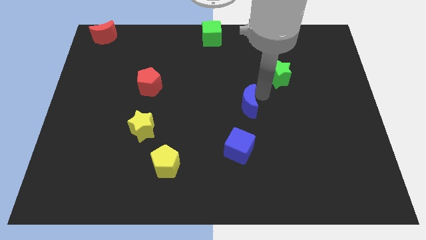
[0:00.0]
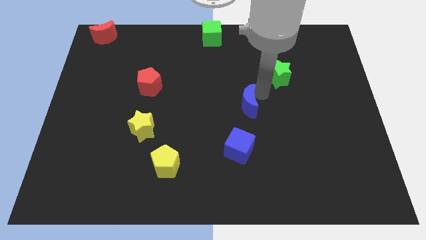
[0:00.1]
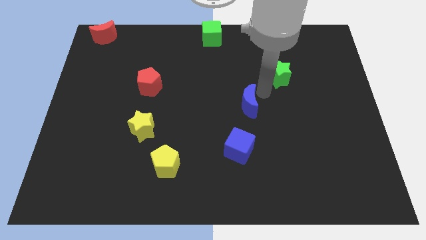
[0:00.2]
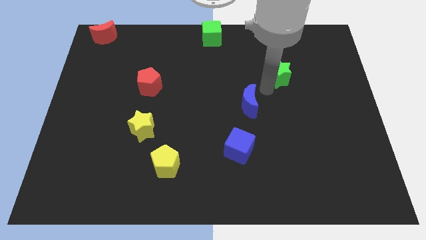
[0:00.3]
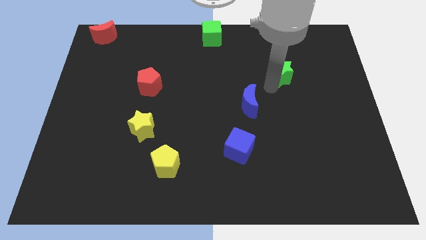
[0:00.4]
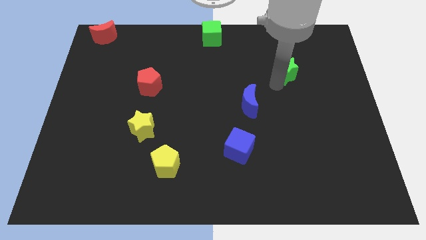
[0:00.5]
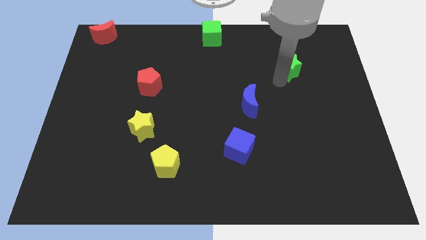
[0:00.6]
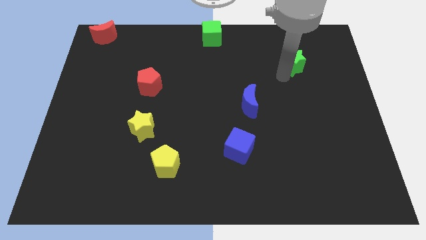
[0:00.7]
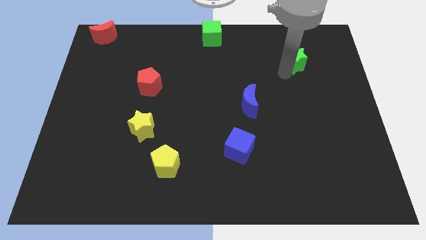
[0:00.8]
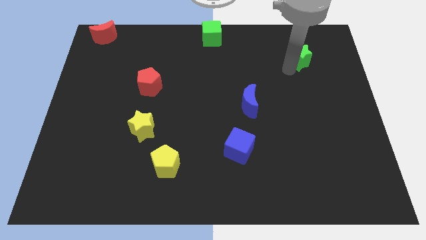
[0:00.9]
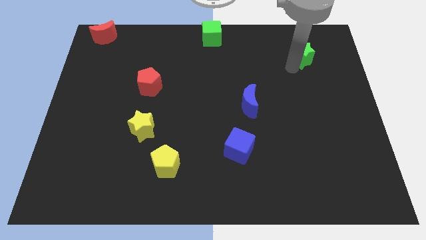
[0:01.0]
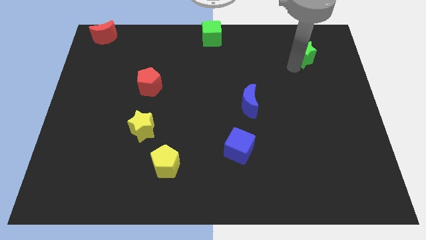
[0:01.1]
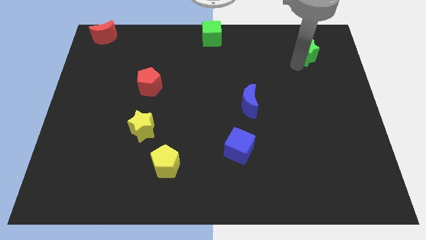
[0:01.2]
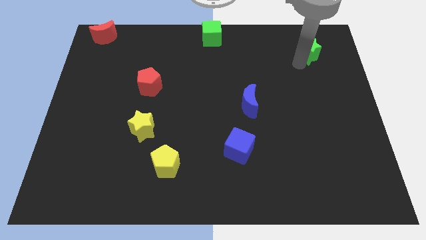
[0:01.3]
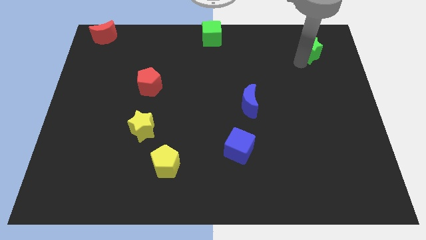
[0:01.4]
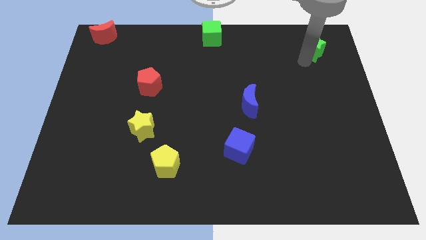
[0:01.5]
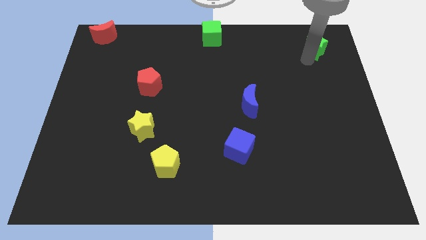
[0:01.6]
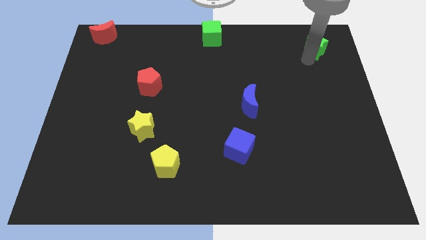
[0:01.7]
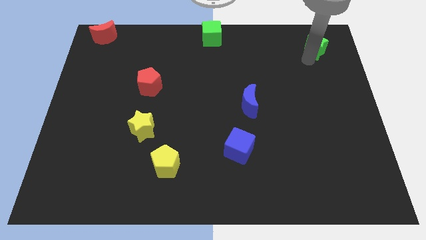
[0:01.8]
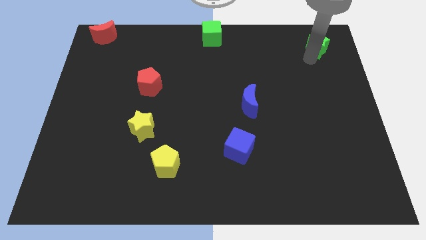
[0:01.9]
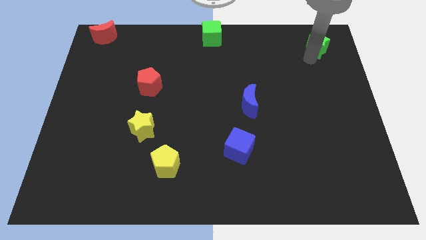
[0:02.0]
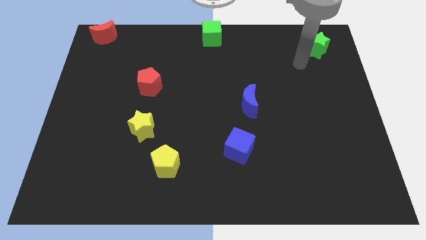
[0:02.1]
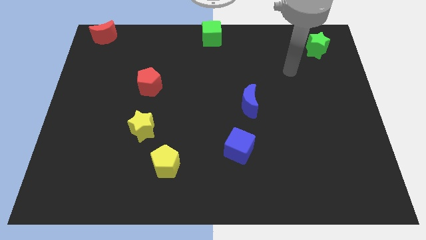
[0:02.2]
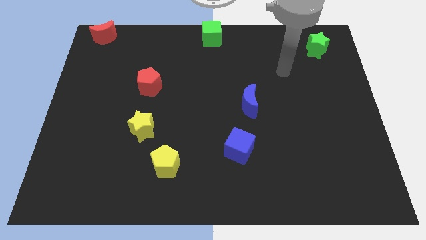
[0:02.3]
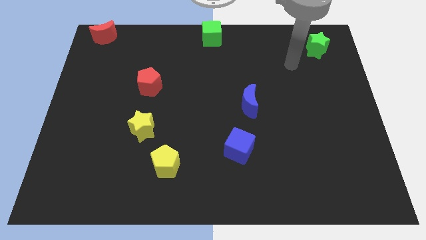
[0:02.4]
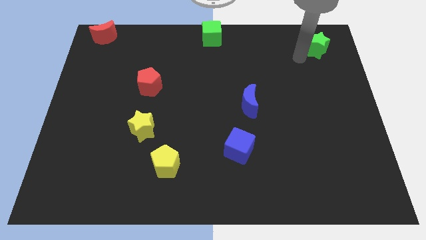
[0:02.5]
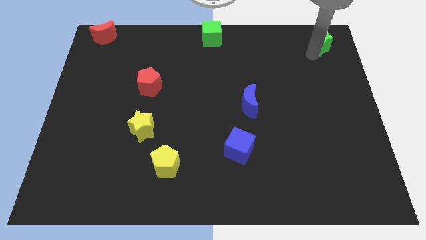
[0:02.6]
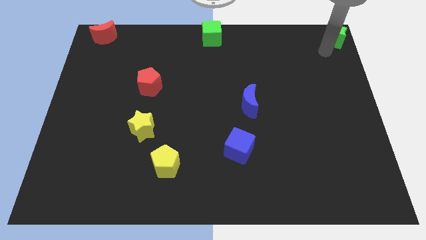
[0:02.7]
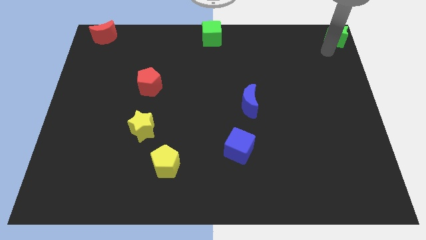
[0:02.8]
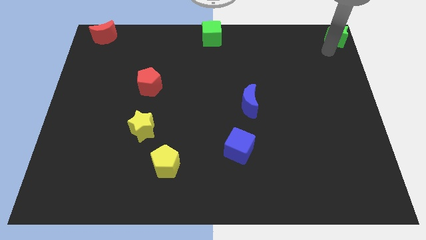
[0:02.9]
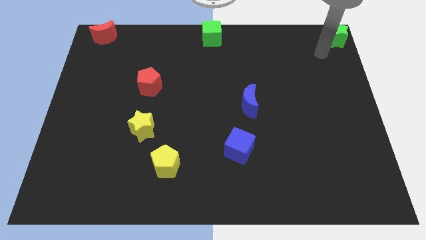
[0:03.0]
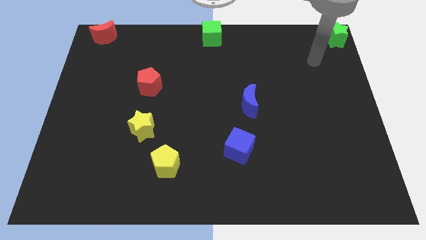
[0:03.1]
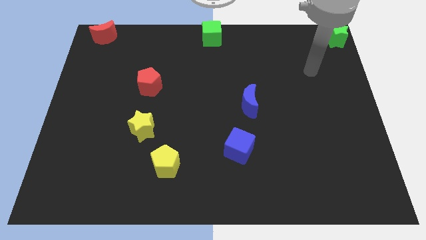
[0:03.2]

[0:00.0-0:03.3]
slide green star at top right corner of board

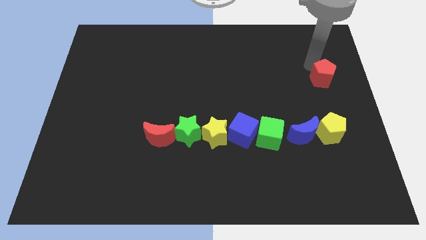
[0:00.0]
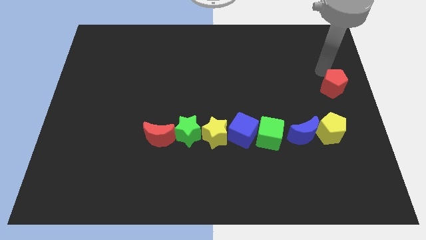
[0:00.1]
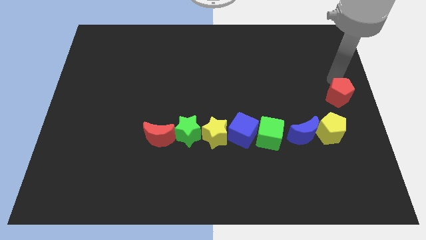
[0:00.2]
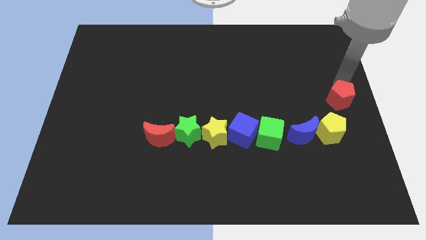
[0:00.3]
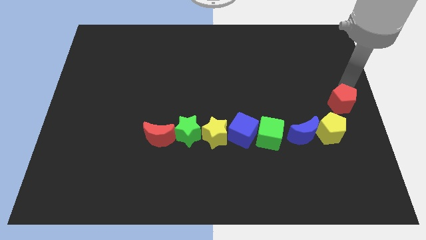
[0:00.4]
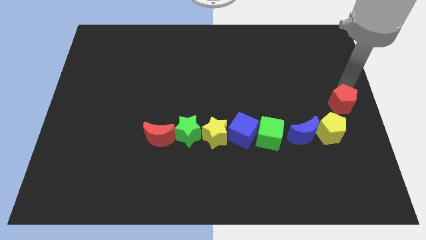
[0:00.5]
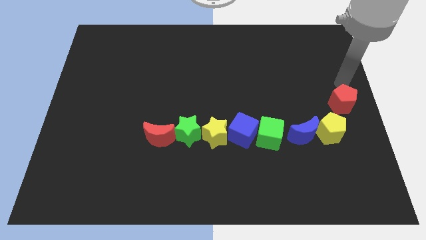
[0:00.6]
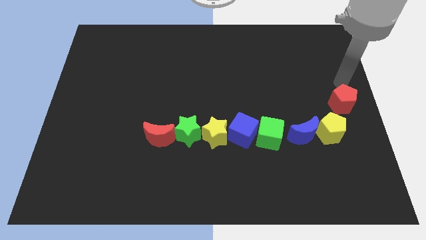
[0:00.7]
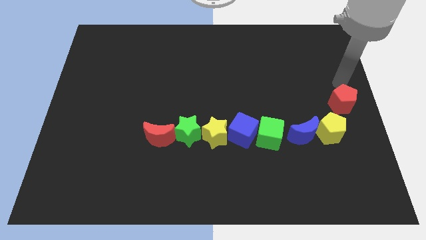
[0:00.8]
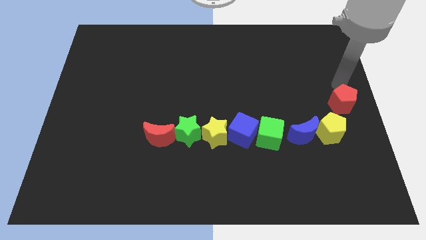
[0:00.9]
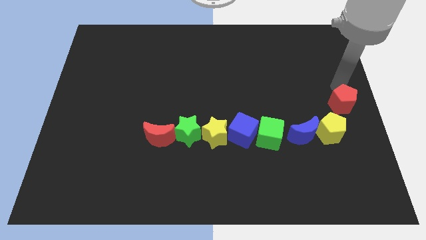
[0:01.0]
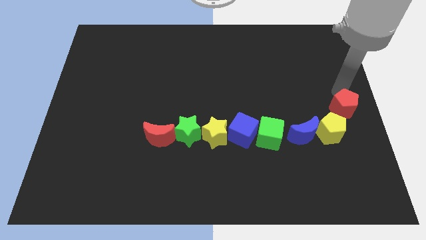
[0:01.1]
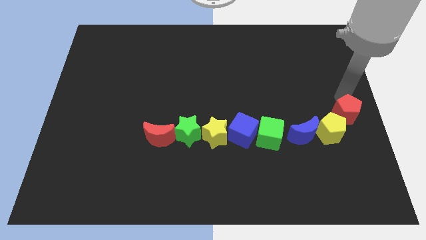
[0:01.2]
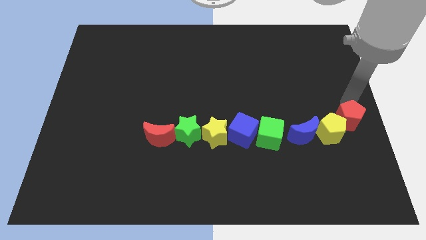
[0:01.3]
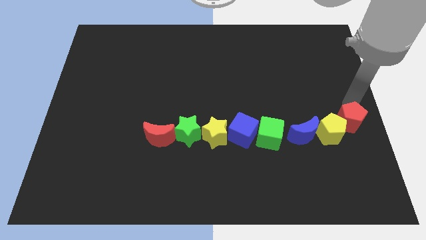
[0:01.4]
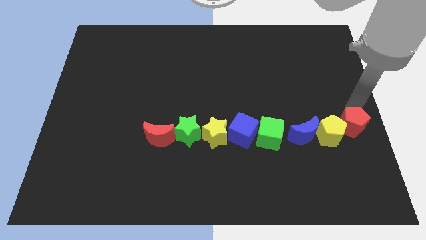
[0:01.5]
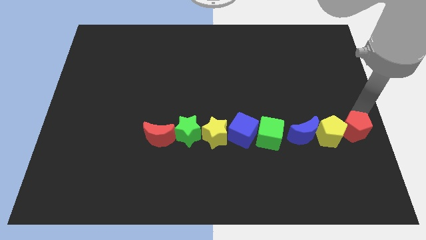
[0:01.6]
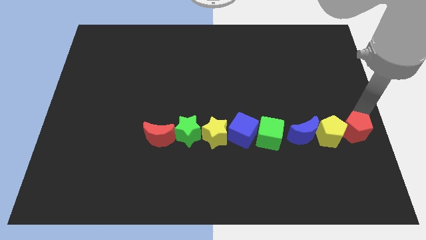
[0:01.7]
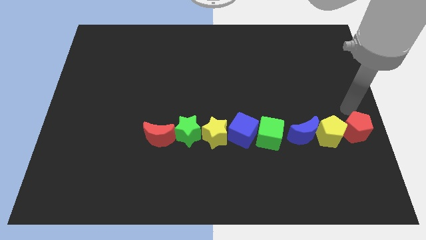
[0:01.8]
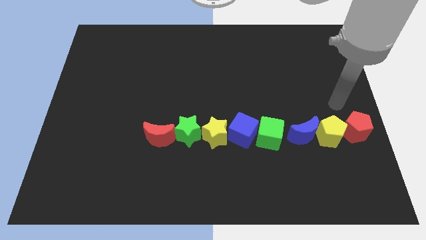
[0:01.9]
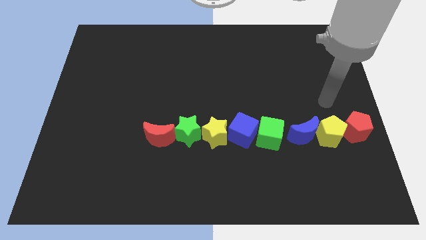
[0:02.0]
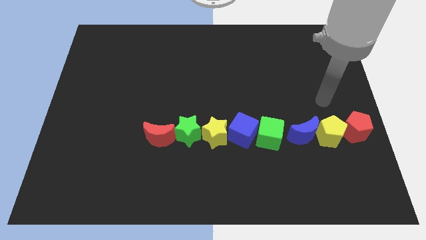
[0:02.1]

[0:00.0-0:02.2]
move the red pentagon bottom right of the board to form a horizontal line

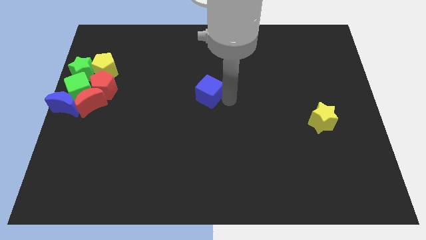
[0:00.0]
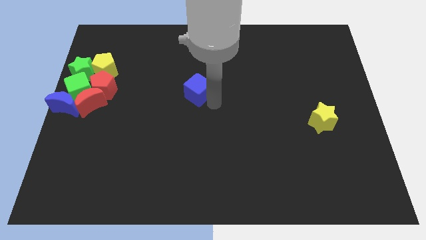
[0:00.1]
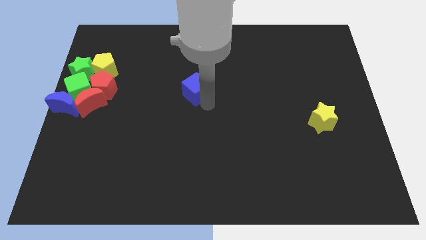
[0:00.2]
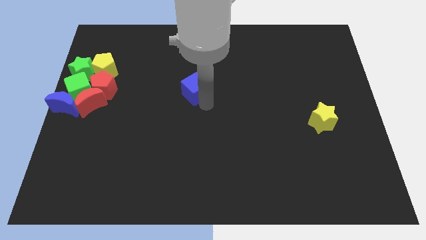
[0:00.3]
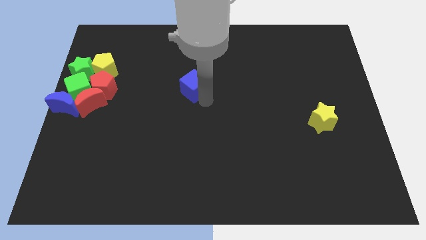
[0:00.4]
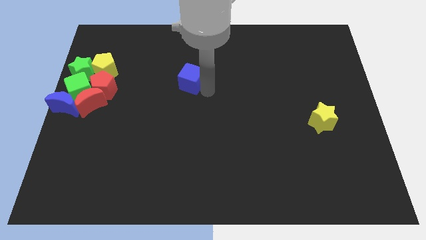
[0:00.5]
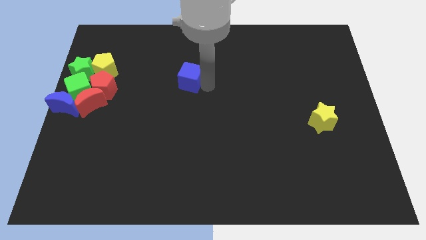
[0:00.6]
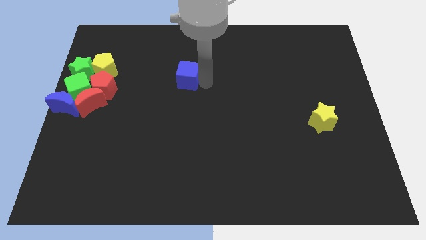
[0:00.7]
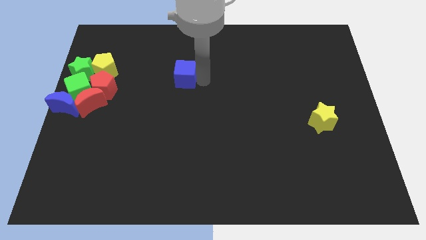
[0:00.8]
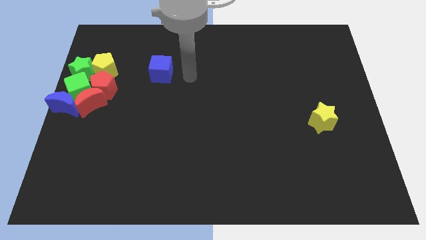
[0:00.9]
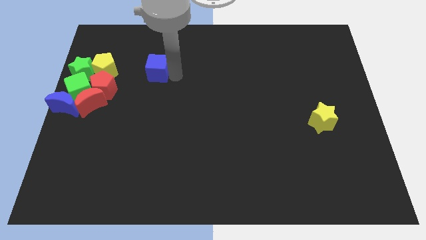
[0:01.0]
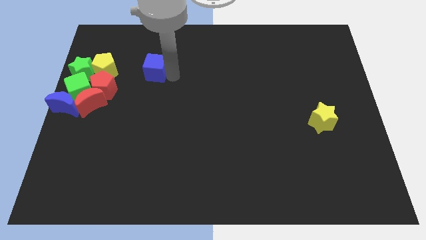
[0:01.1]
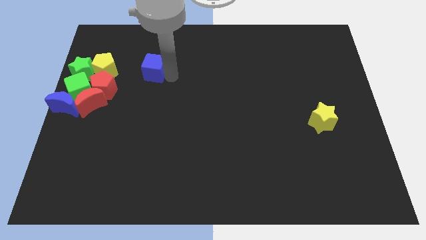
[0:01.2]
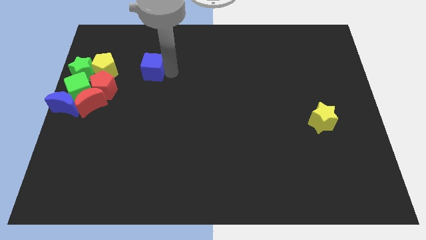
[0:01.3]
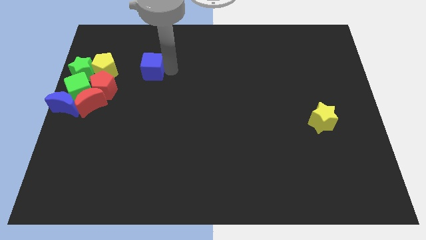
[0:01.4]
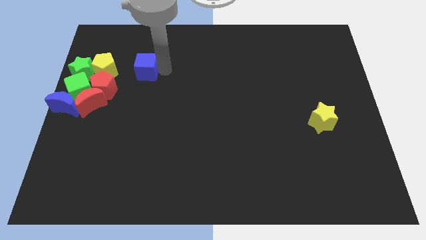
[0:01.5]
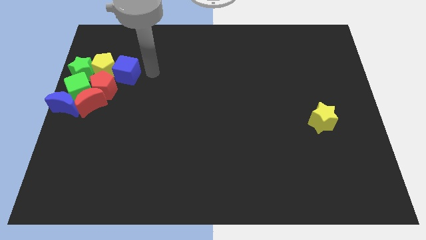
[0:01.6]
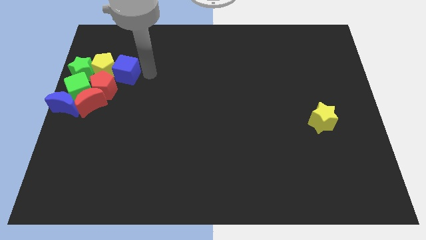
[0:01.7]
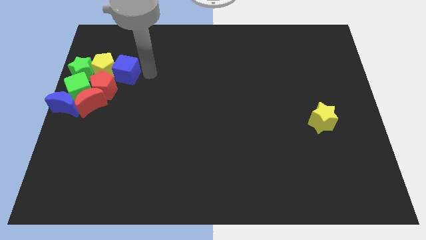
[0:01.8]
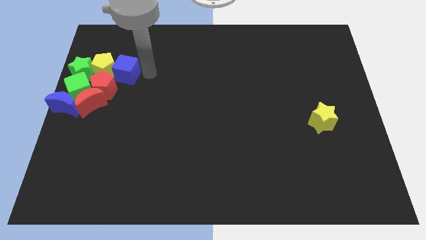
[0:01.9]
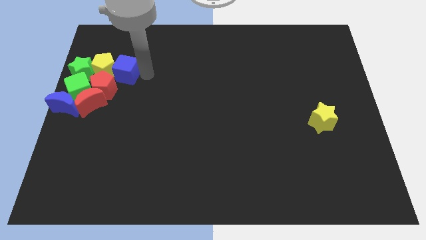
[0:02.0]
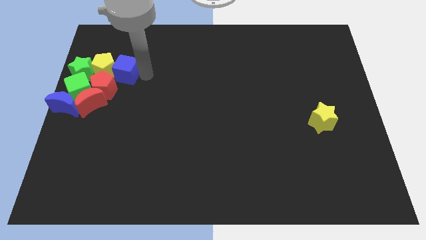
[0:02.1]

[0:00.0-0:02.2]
put the blue cube at the right of the yellow pentagon

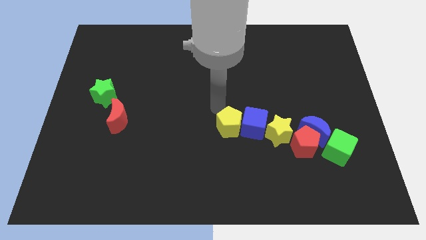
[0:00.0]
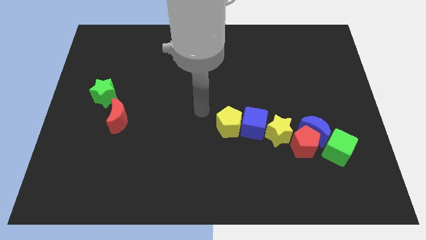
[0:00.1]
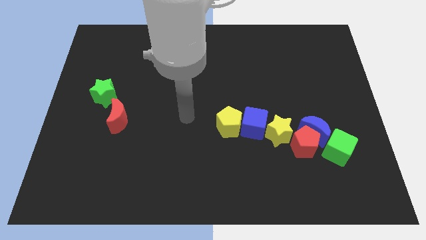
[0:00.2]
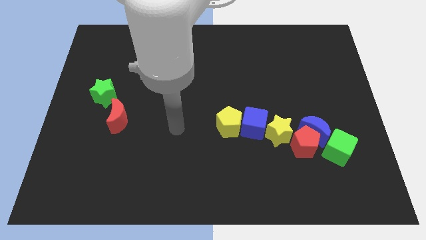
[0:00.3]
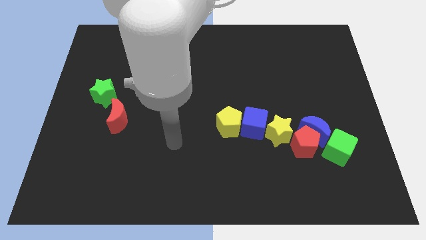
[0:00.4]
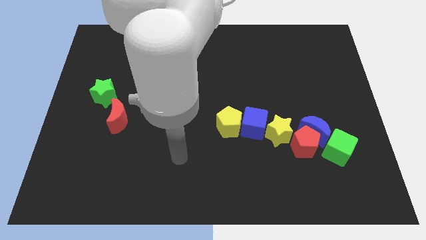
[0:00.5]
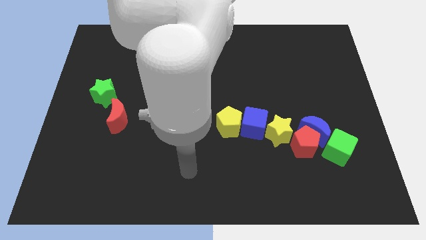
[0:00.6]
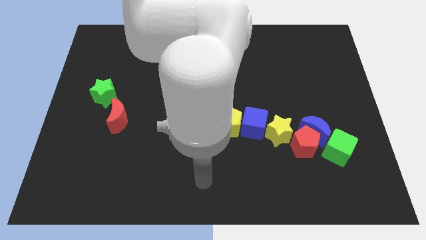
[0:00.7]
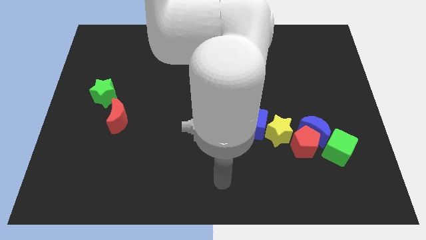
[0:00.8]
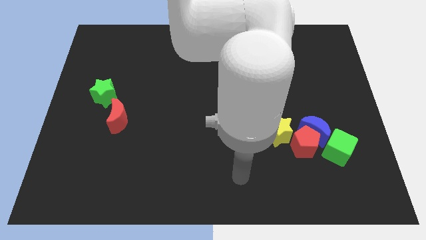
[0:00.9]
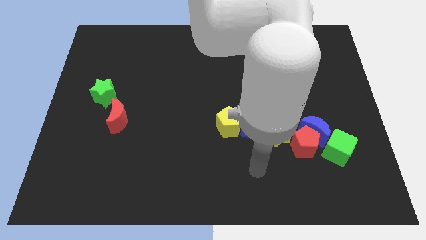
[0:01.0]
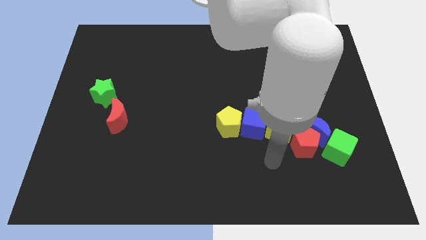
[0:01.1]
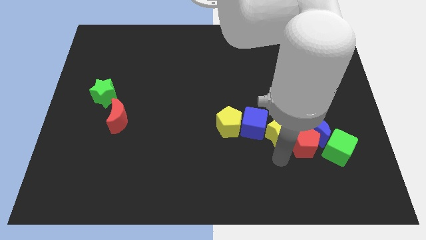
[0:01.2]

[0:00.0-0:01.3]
point the arm below the yellow star
